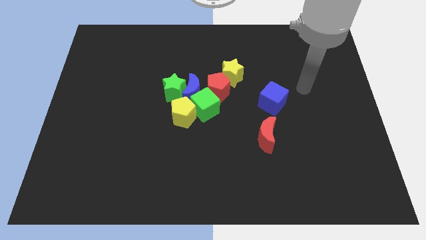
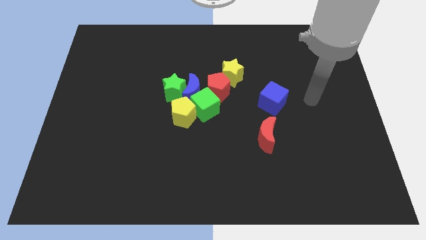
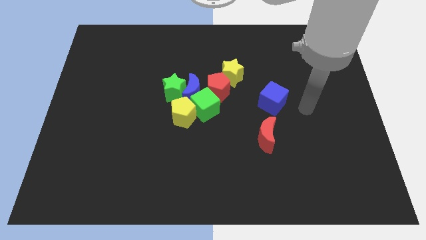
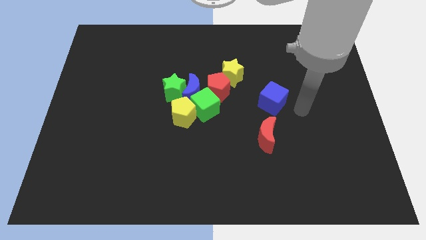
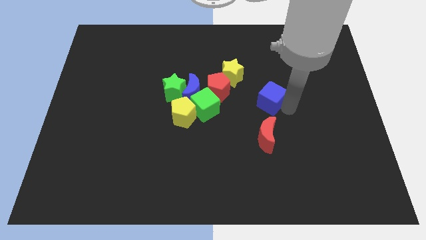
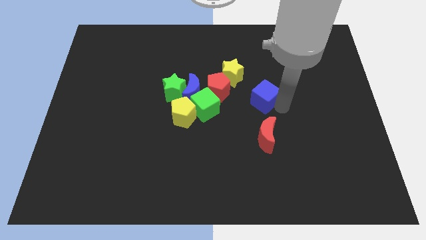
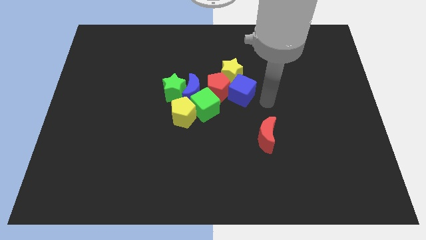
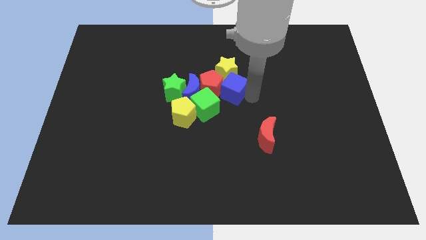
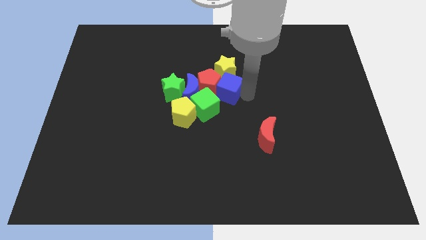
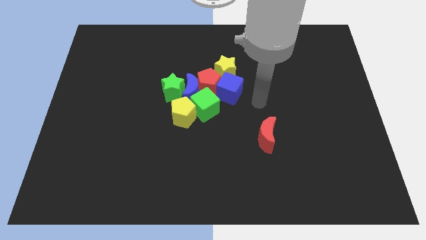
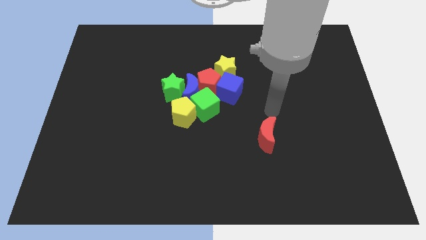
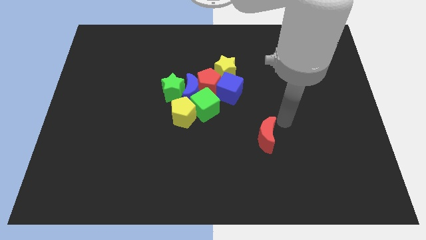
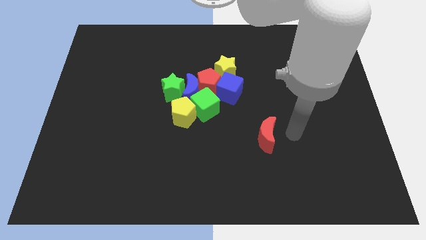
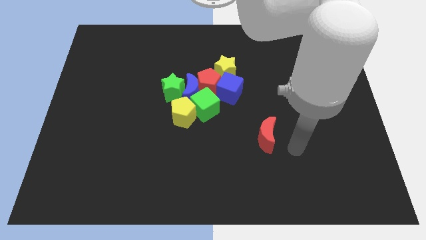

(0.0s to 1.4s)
move the blue cube into the right of red pentagon

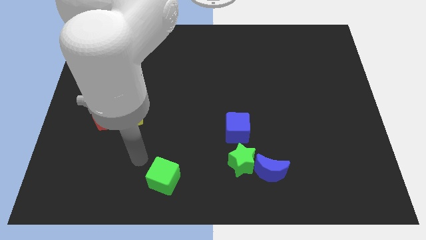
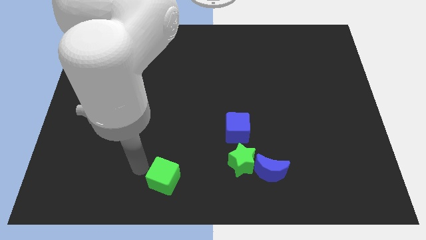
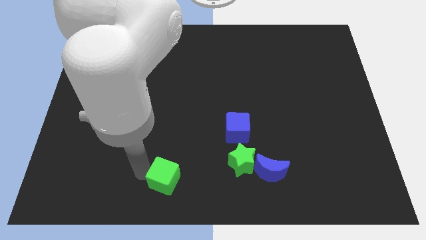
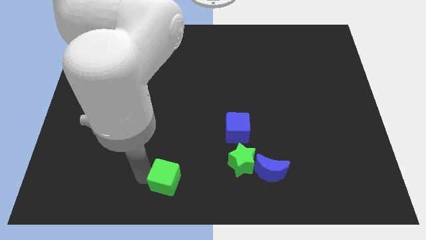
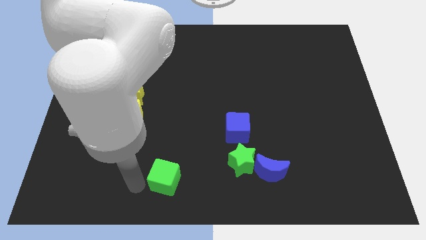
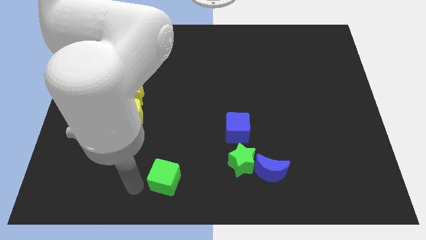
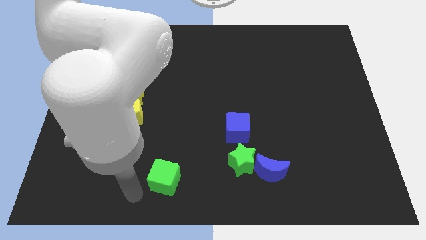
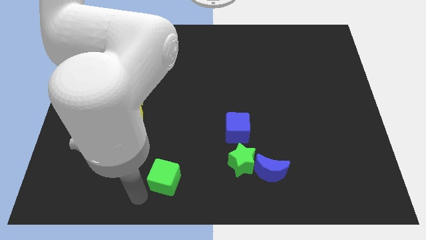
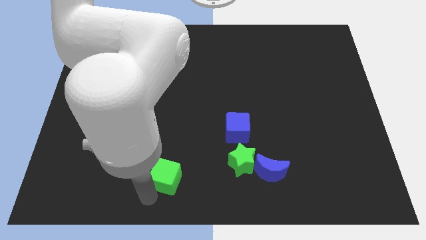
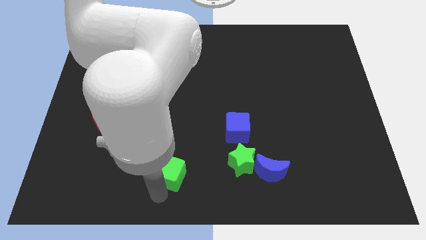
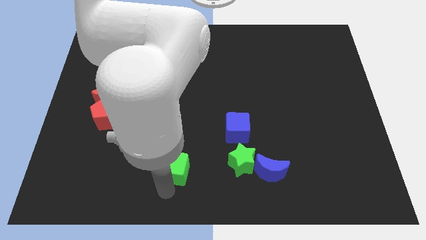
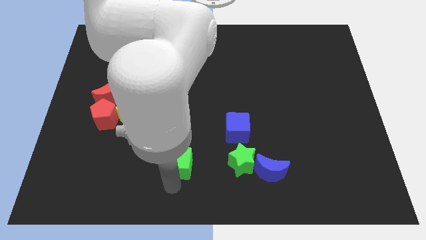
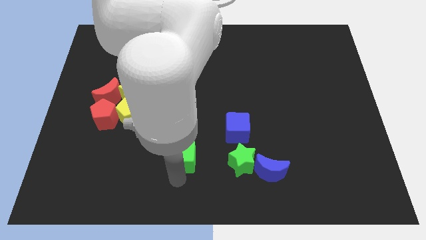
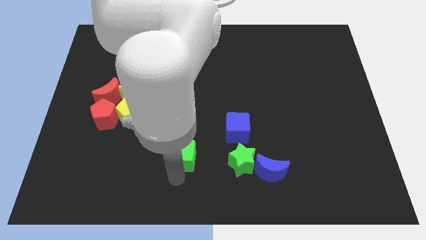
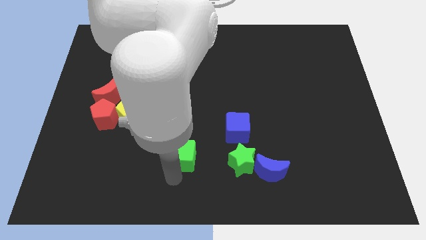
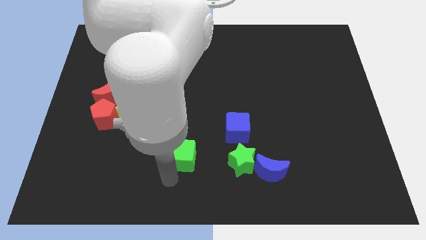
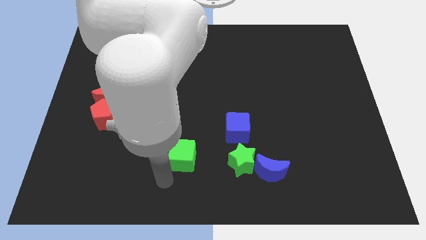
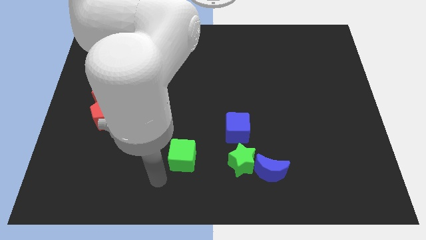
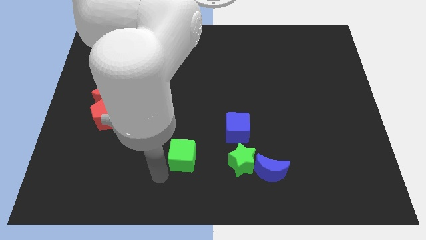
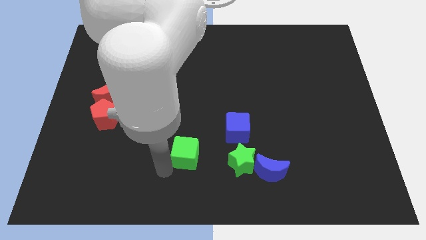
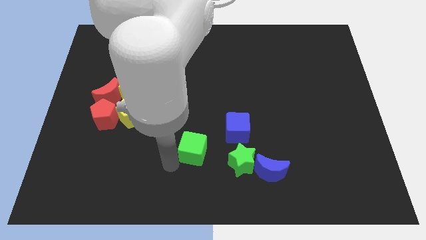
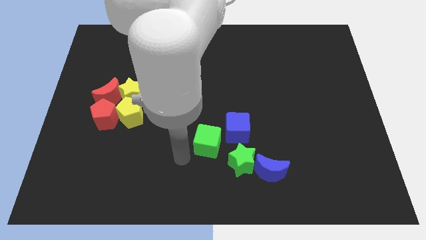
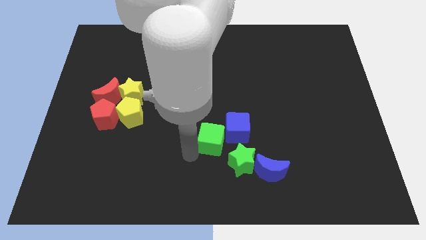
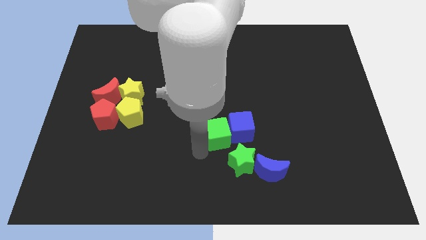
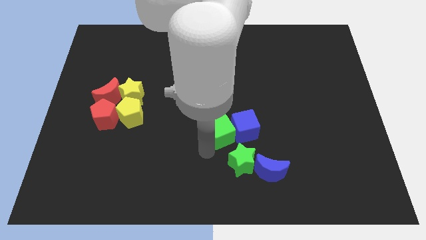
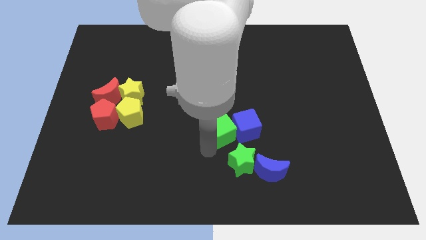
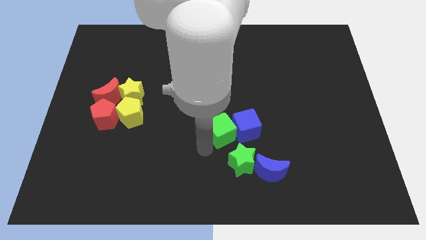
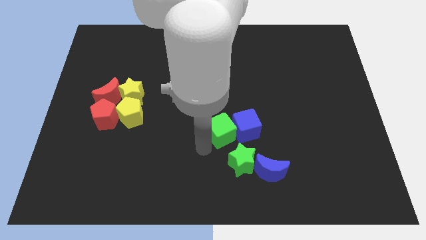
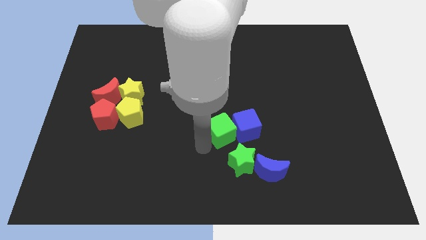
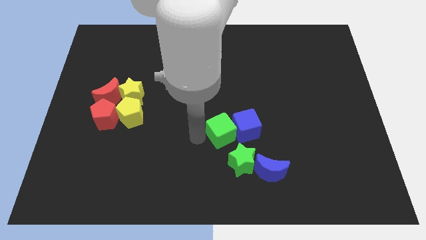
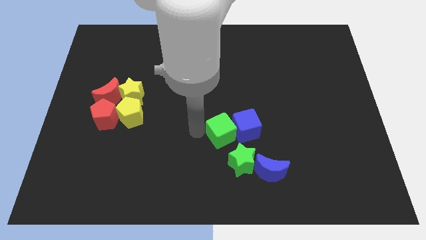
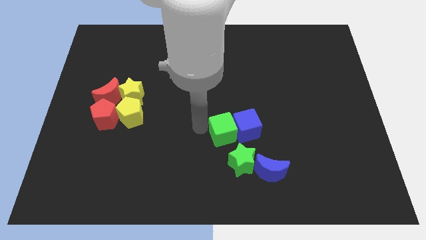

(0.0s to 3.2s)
push green cube into blue cube

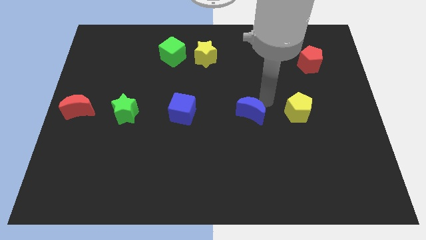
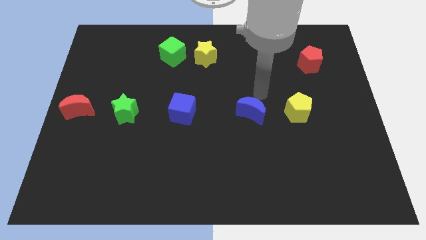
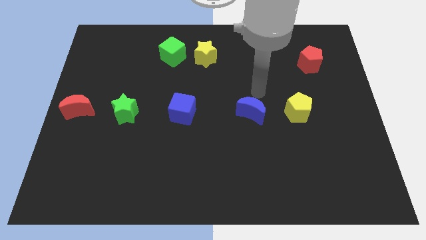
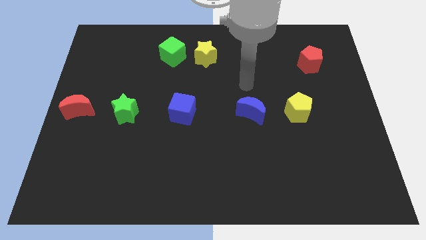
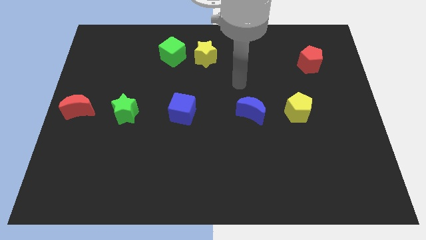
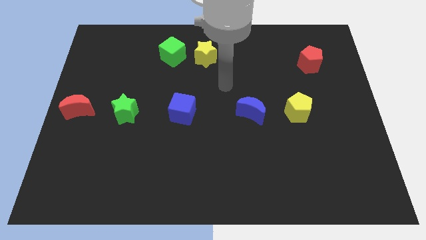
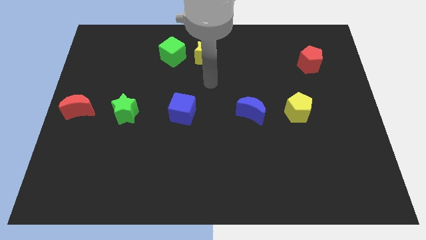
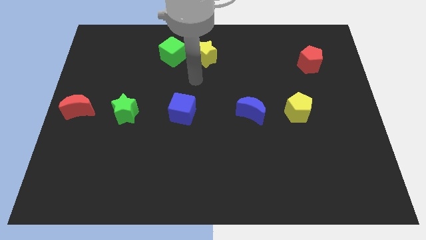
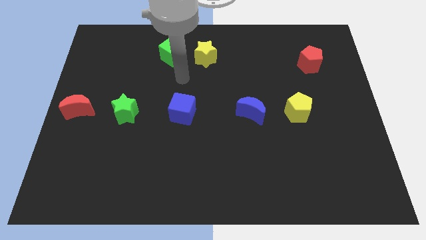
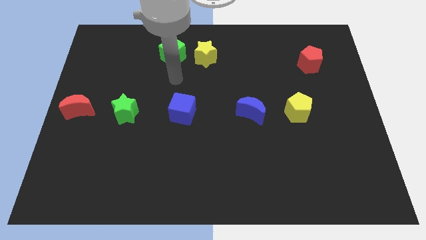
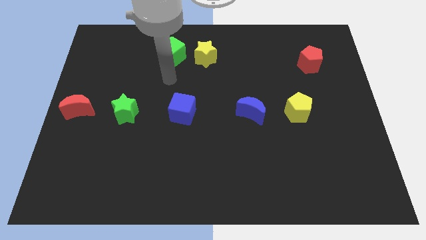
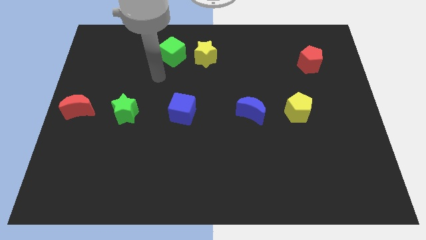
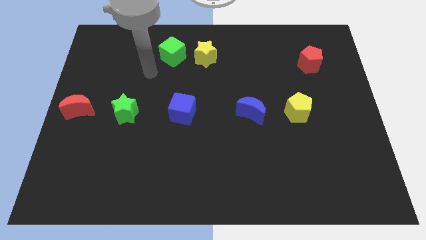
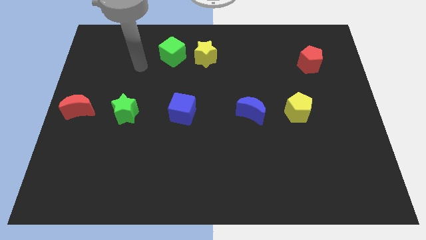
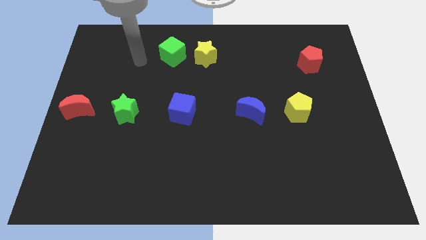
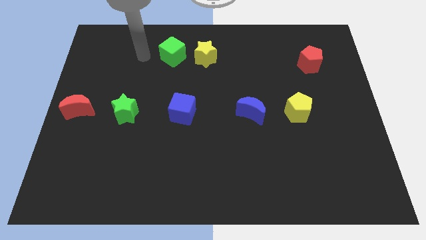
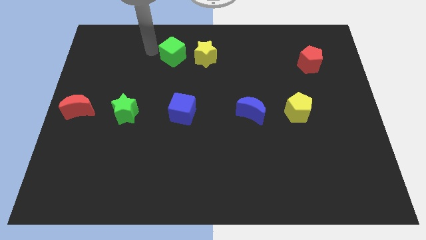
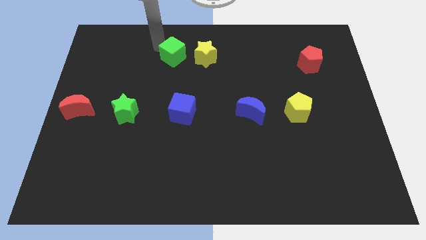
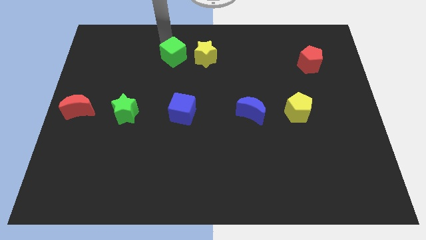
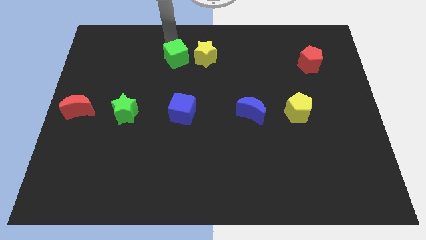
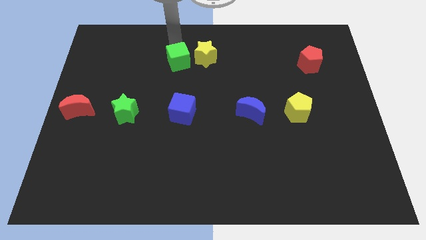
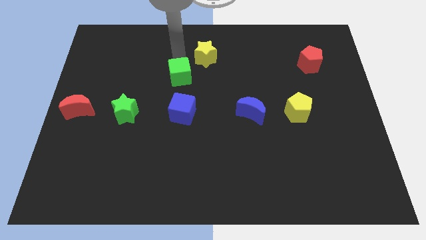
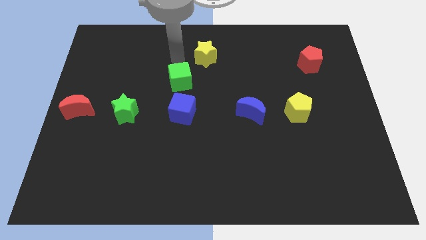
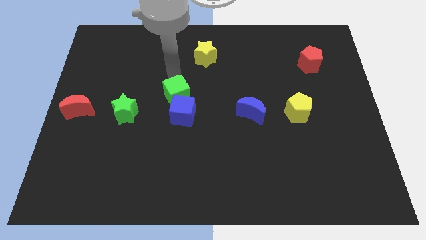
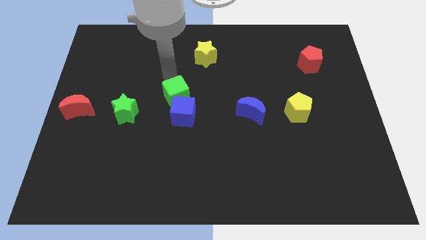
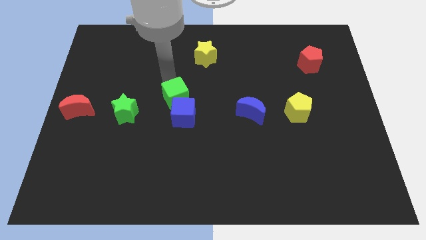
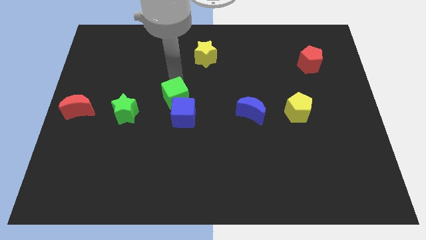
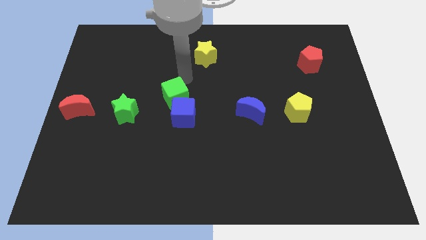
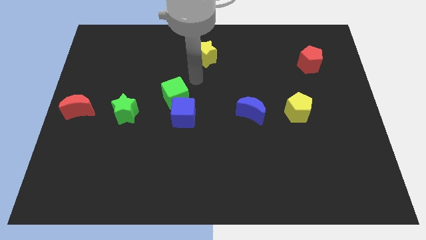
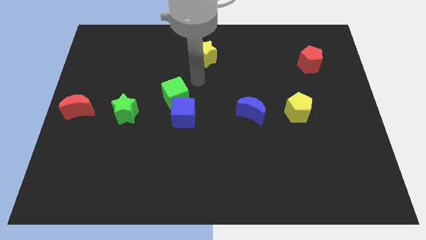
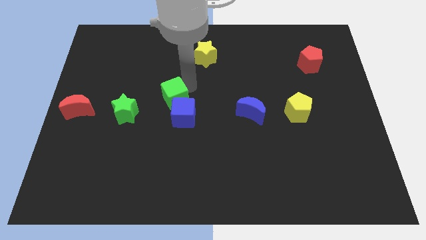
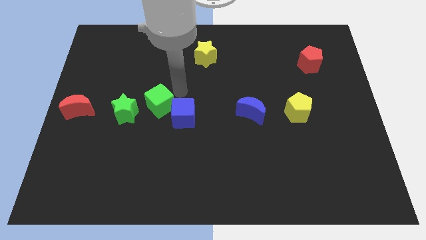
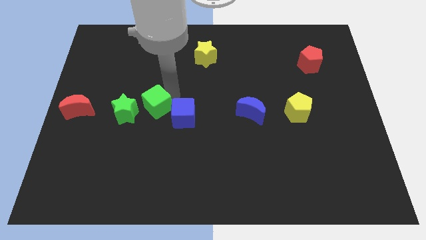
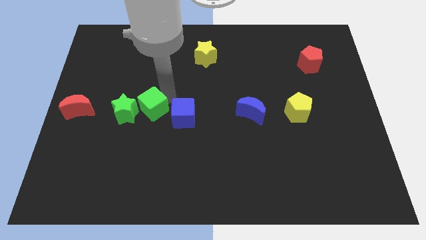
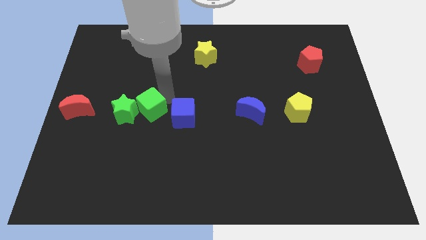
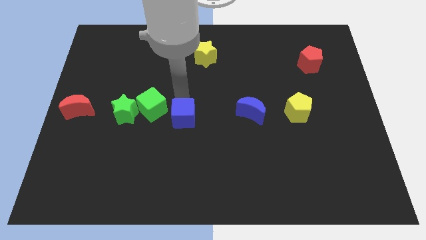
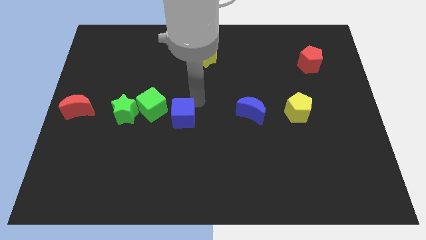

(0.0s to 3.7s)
place the green cube in between the blue cube and green star

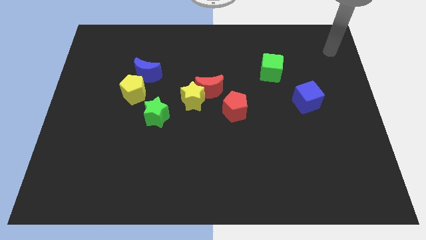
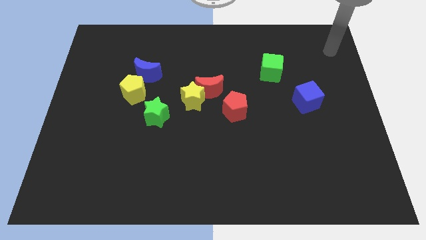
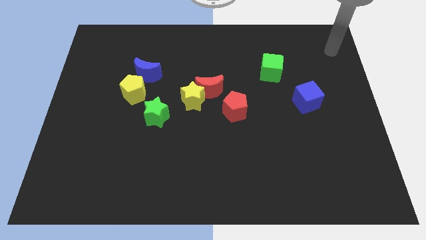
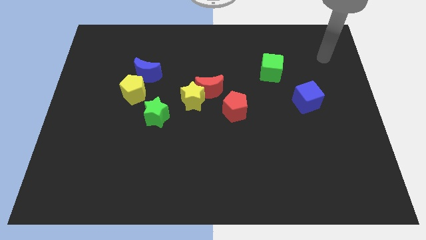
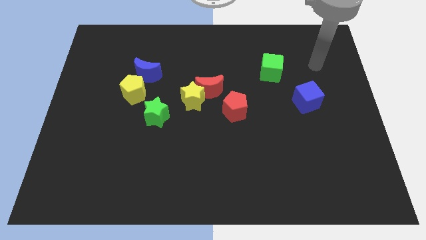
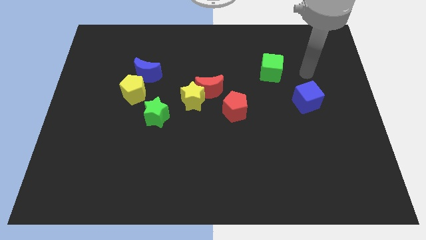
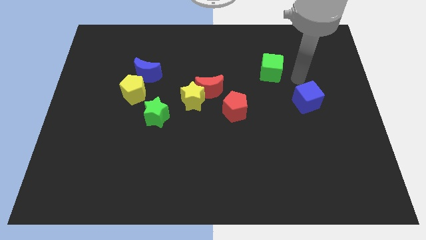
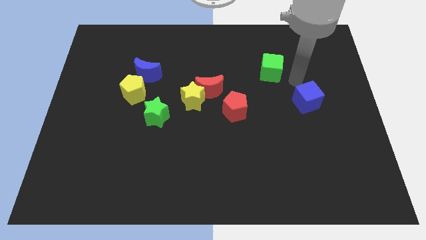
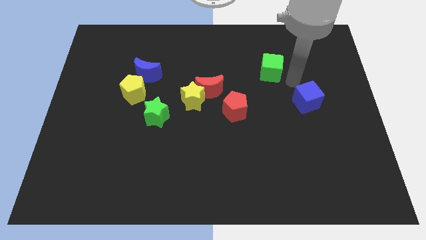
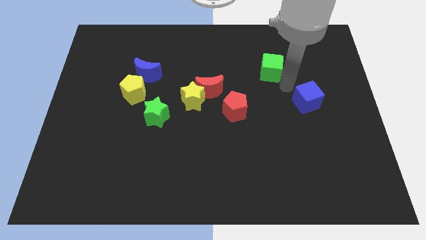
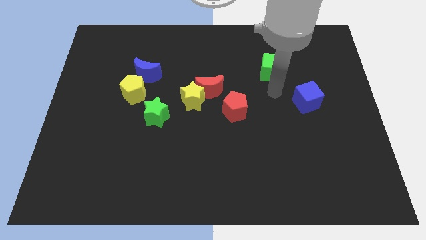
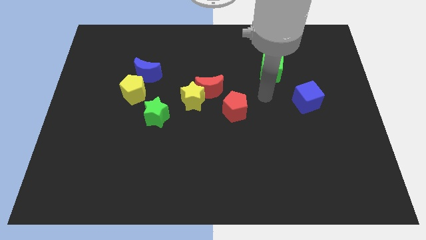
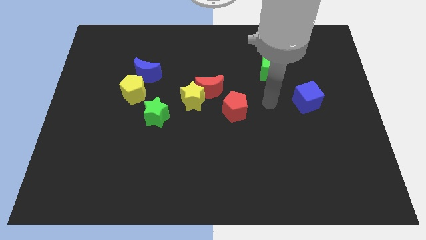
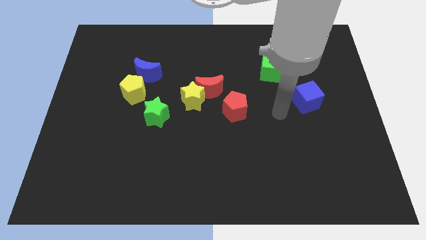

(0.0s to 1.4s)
move your arm to the left side of the blue cube
